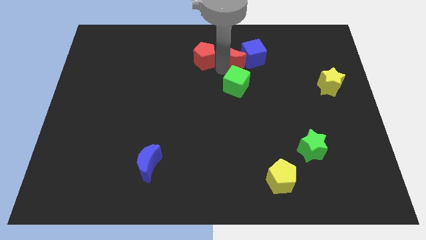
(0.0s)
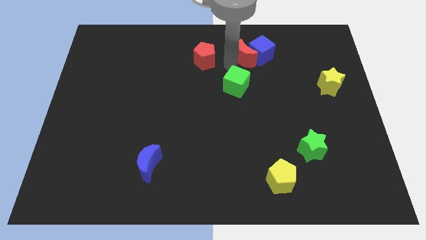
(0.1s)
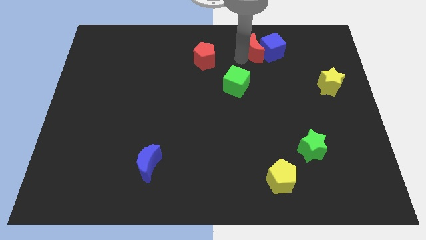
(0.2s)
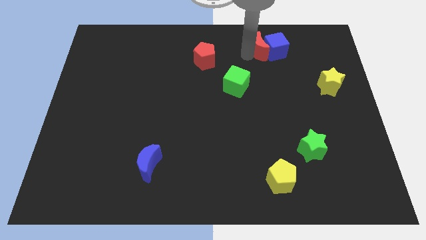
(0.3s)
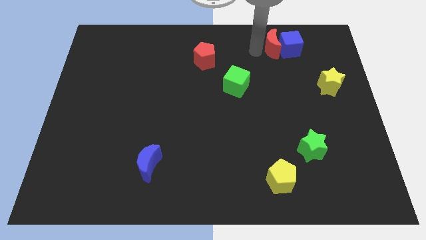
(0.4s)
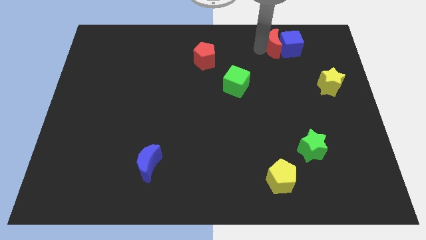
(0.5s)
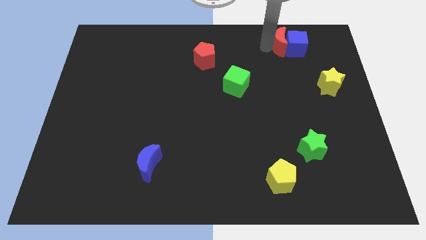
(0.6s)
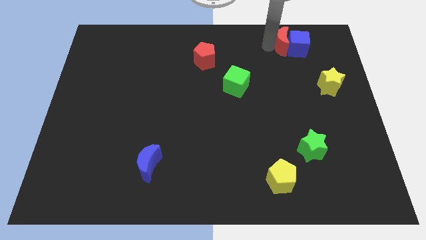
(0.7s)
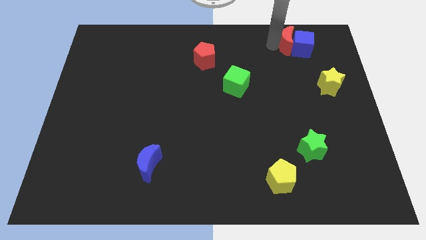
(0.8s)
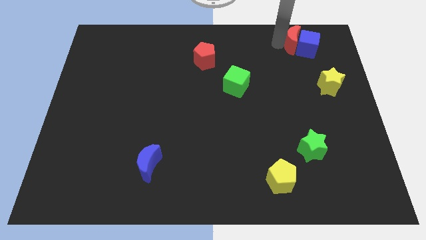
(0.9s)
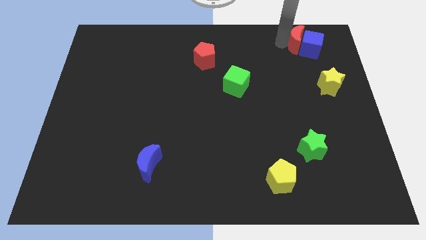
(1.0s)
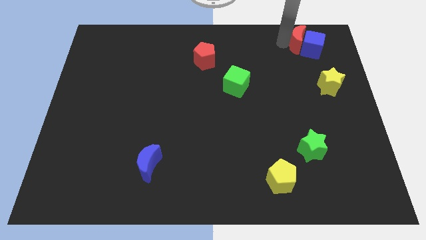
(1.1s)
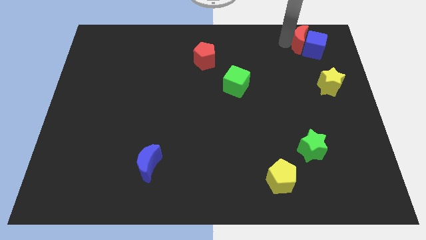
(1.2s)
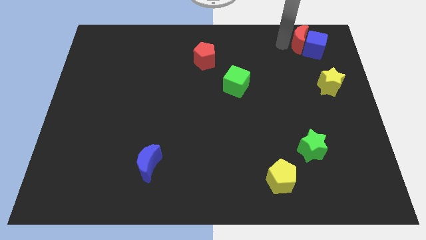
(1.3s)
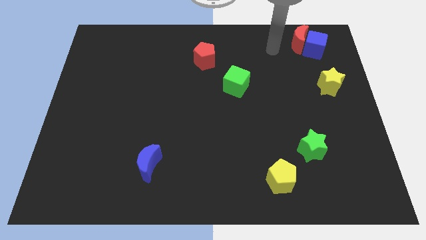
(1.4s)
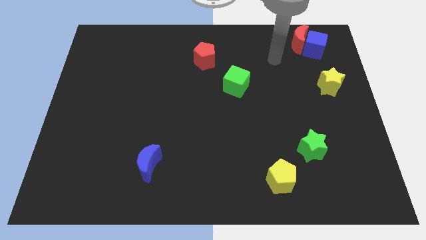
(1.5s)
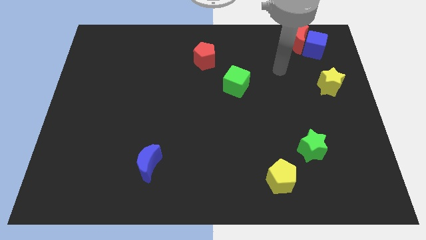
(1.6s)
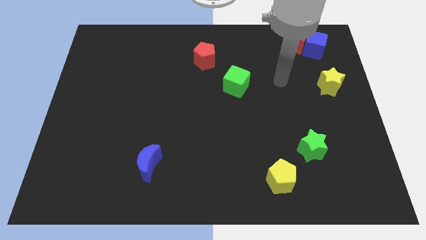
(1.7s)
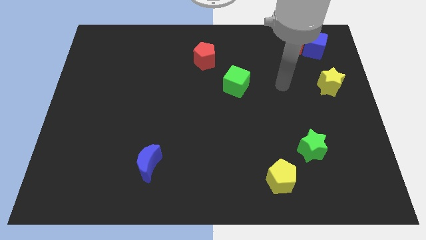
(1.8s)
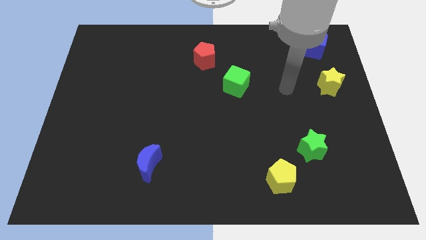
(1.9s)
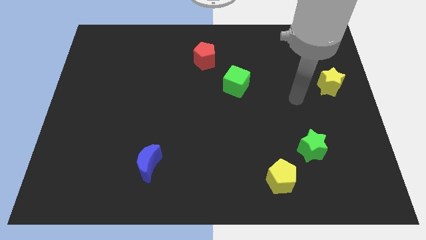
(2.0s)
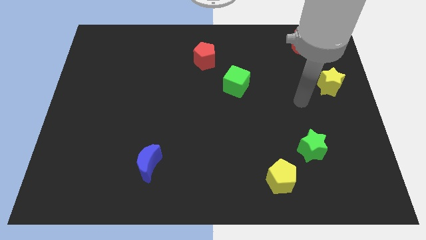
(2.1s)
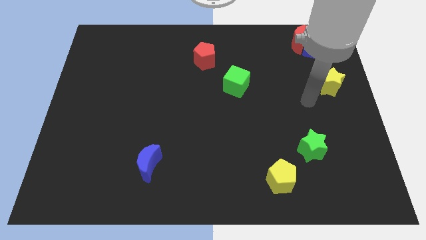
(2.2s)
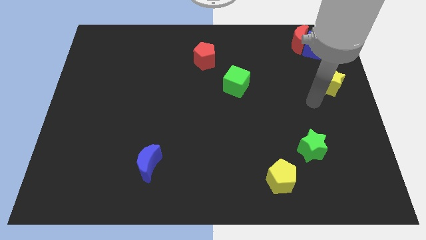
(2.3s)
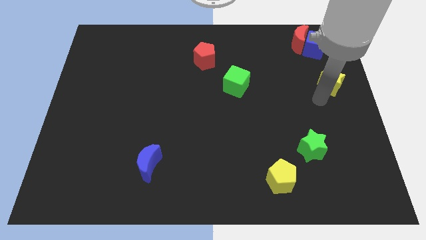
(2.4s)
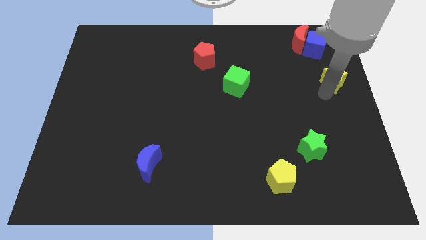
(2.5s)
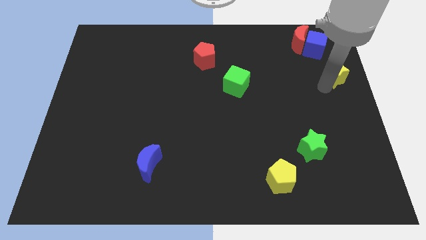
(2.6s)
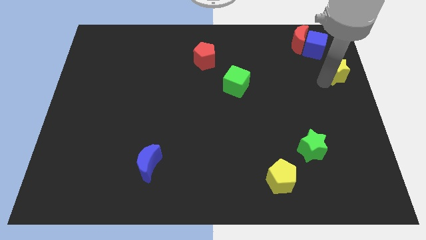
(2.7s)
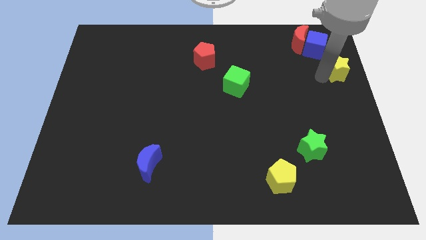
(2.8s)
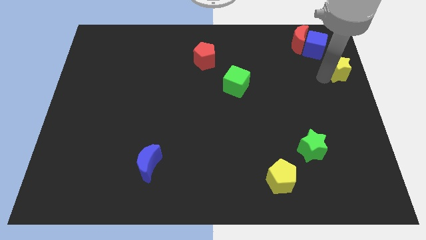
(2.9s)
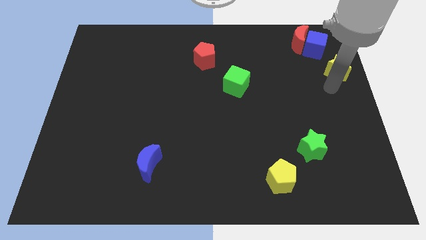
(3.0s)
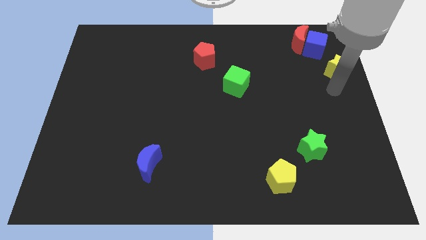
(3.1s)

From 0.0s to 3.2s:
drag red moon and blue cube to the top right of the board

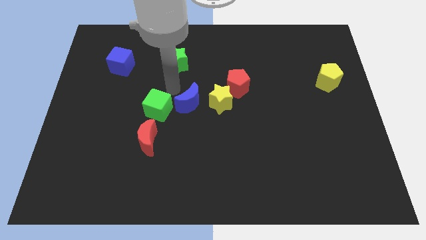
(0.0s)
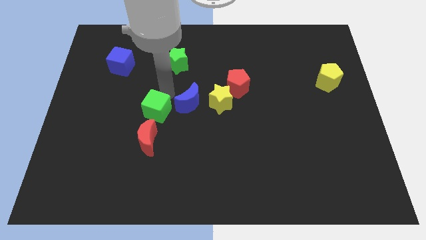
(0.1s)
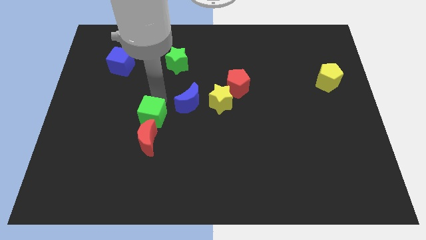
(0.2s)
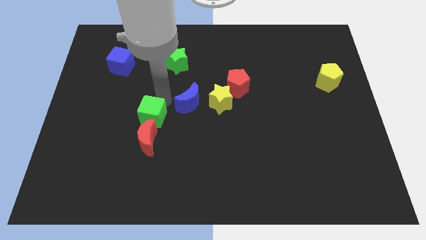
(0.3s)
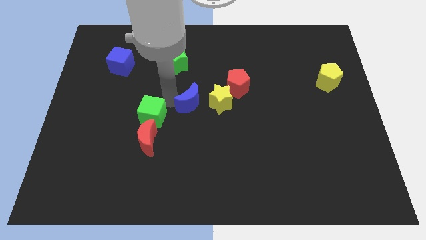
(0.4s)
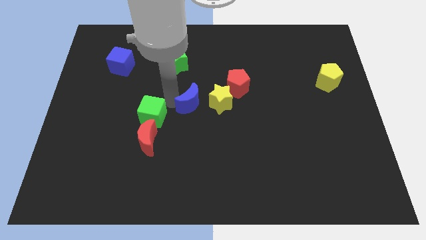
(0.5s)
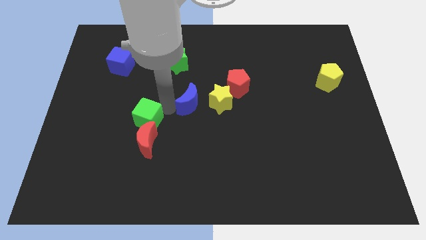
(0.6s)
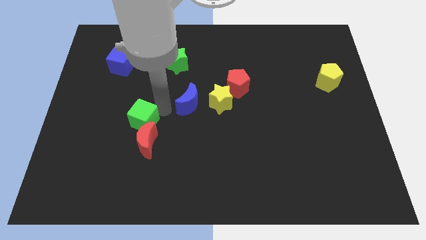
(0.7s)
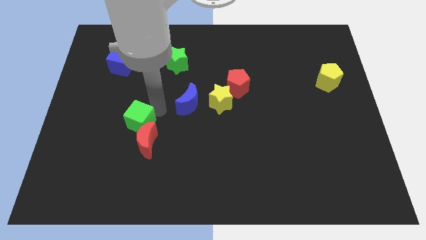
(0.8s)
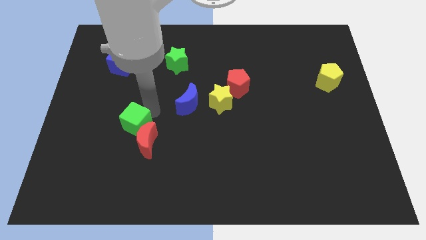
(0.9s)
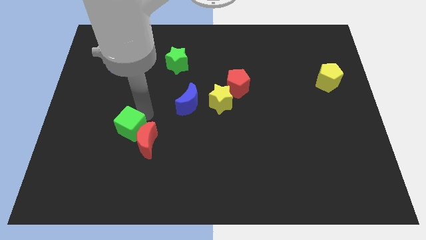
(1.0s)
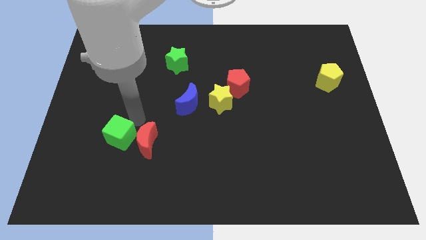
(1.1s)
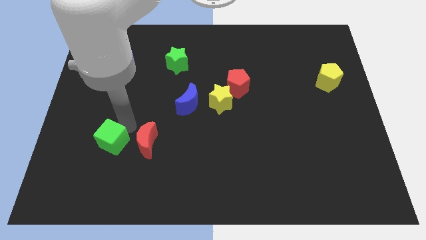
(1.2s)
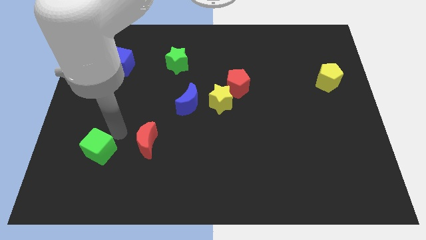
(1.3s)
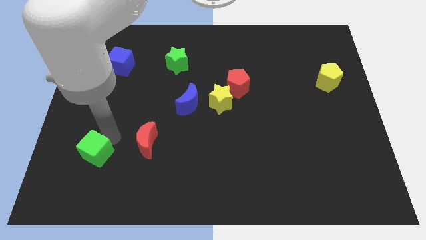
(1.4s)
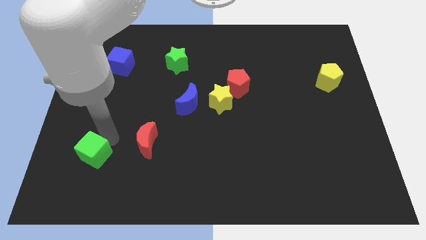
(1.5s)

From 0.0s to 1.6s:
move green cube downwards

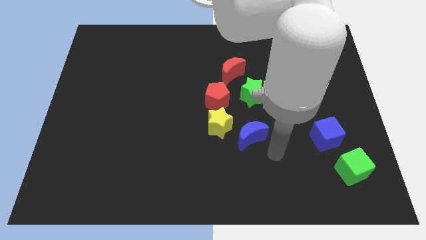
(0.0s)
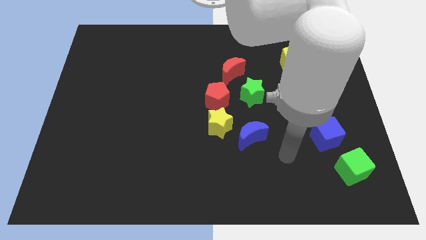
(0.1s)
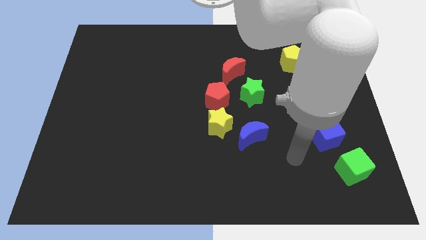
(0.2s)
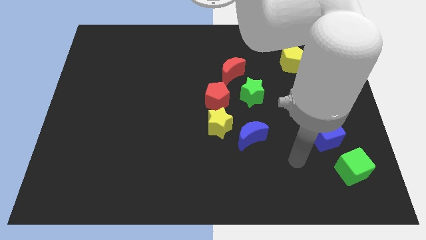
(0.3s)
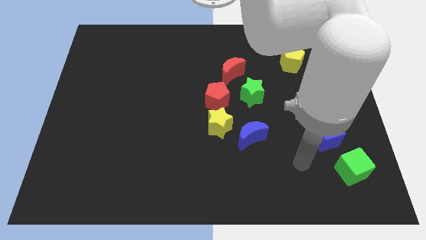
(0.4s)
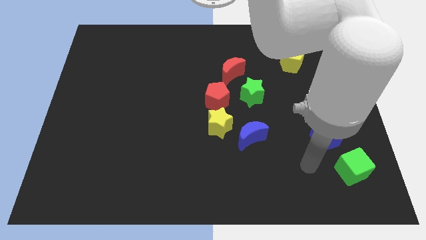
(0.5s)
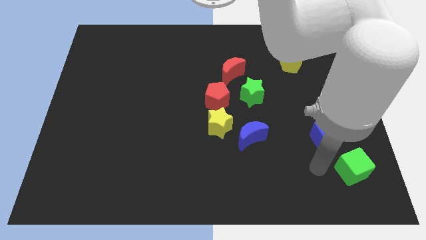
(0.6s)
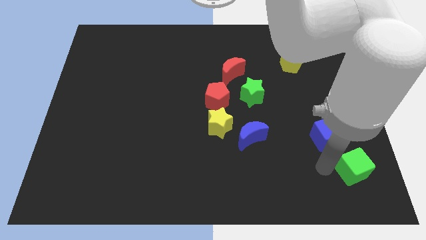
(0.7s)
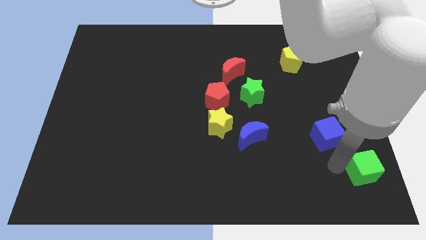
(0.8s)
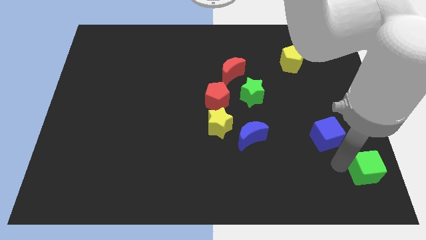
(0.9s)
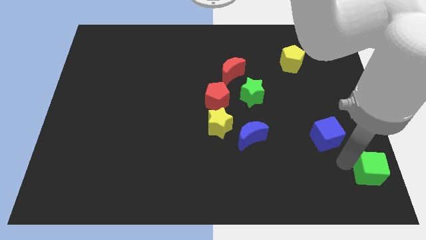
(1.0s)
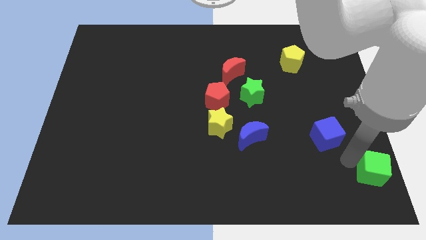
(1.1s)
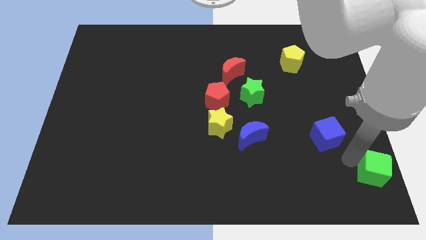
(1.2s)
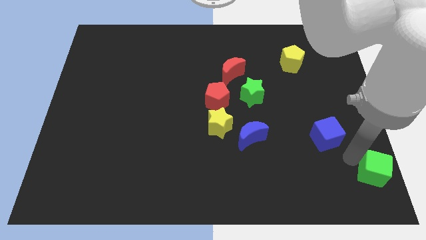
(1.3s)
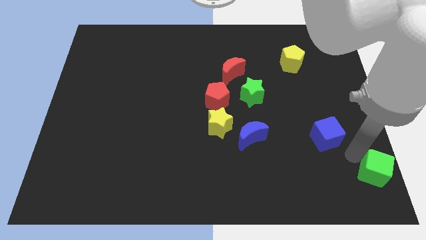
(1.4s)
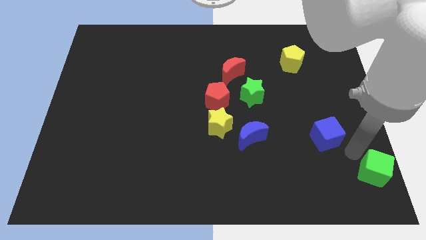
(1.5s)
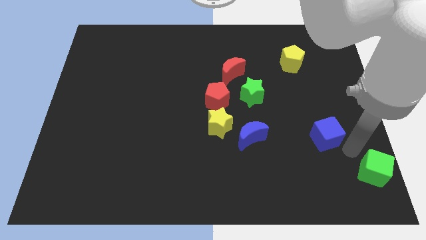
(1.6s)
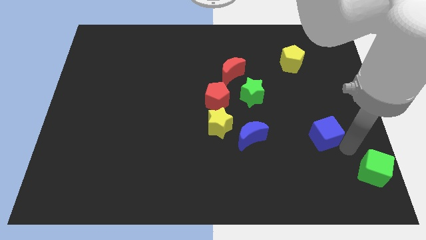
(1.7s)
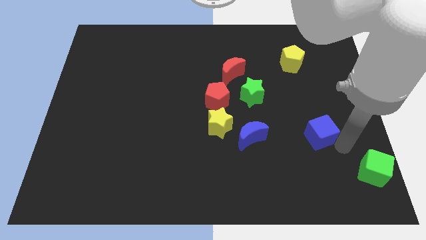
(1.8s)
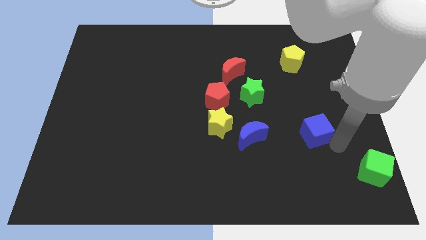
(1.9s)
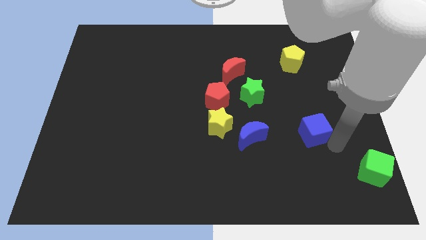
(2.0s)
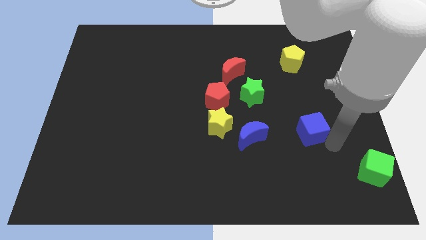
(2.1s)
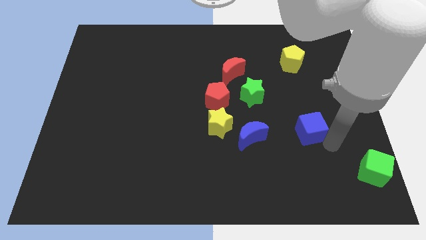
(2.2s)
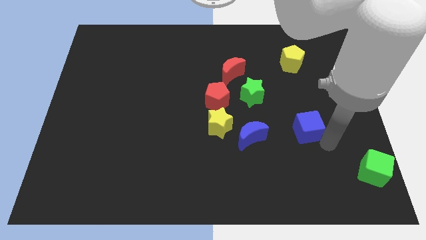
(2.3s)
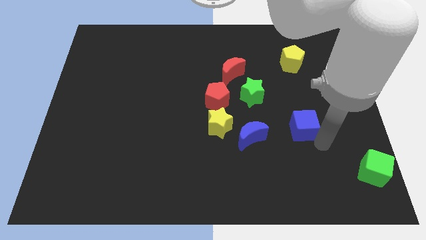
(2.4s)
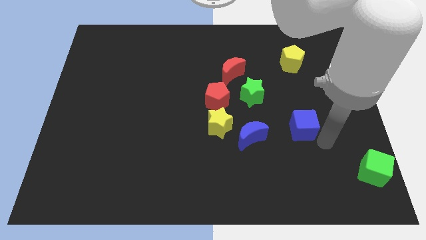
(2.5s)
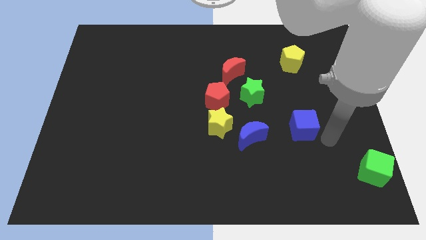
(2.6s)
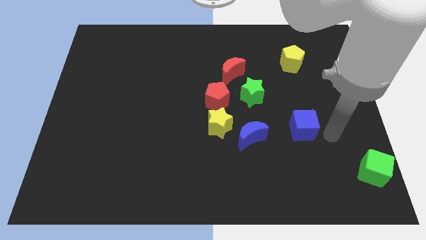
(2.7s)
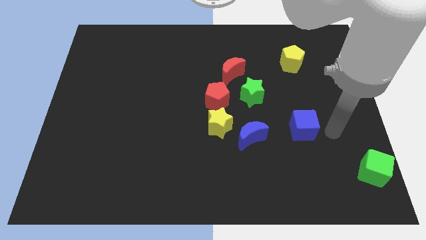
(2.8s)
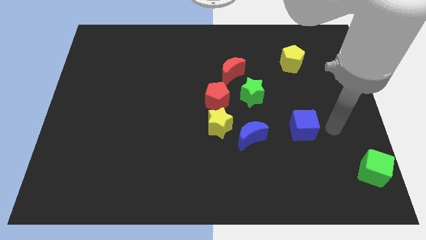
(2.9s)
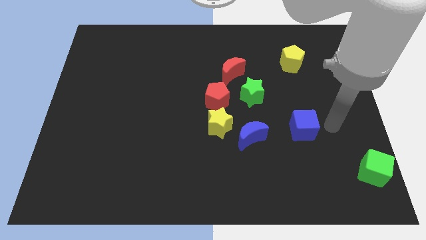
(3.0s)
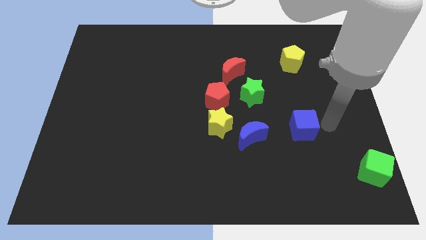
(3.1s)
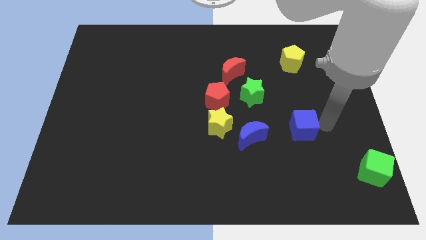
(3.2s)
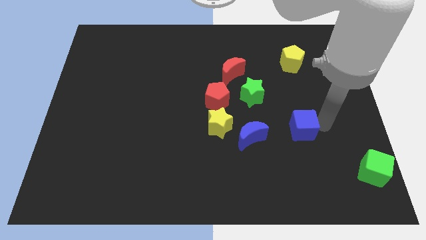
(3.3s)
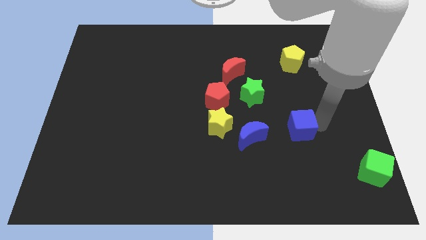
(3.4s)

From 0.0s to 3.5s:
separate the blue and green blocks

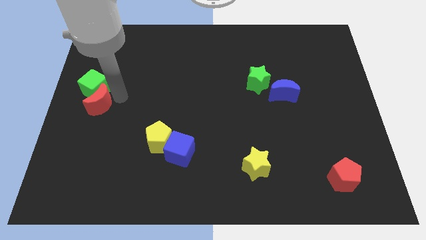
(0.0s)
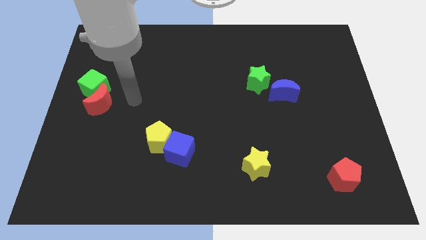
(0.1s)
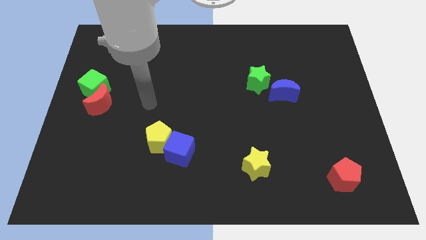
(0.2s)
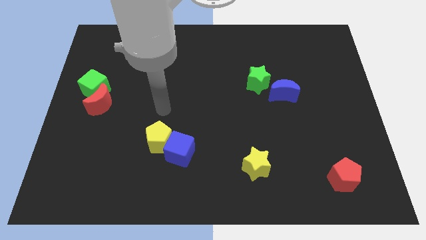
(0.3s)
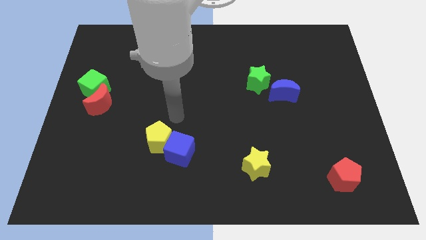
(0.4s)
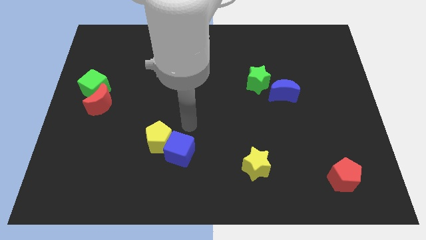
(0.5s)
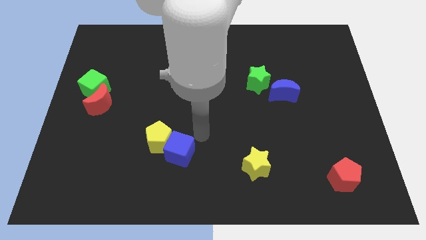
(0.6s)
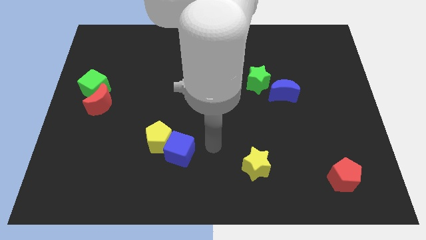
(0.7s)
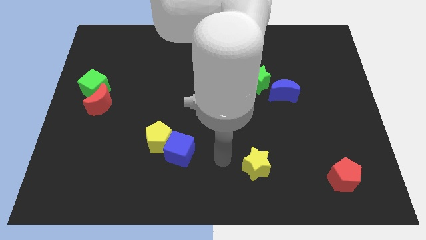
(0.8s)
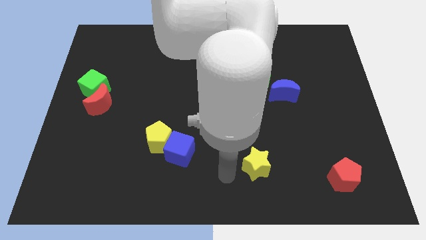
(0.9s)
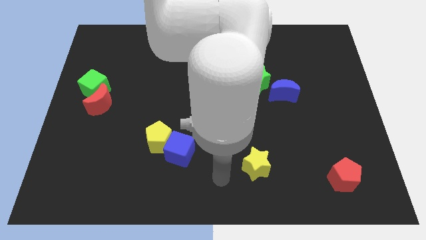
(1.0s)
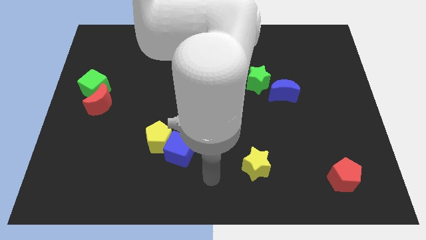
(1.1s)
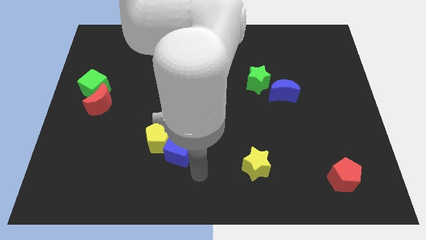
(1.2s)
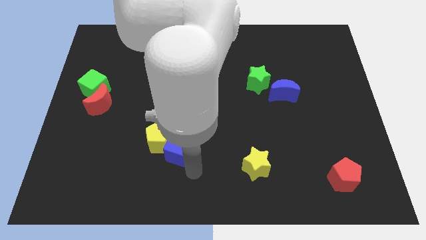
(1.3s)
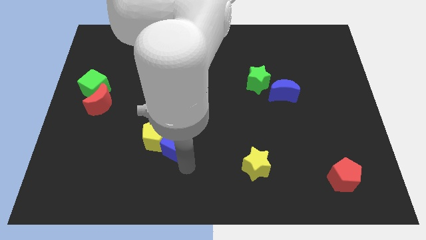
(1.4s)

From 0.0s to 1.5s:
move your arm away from red moon
